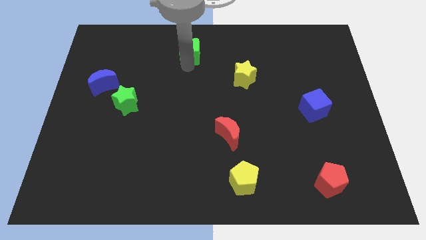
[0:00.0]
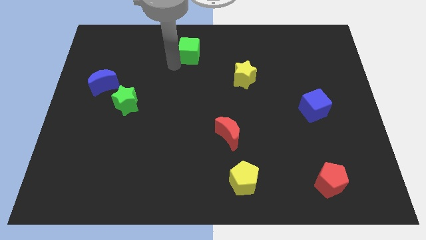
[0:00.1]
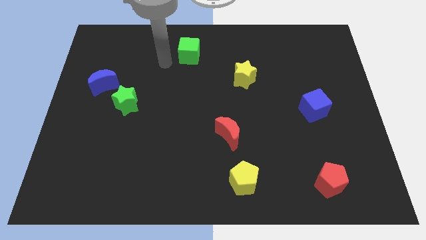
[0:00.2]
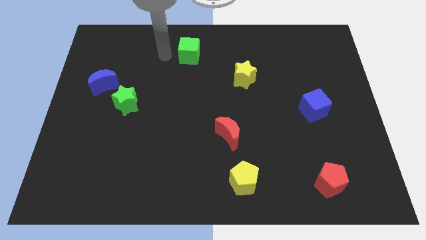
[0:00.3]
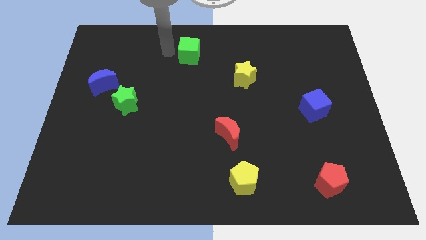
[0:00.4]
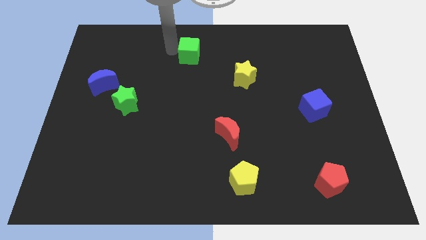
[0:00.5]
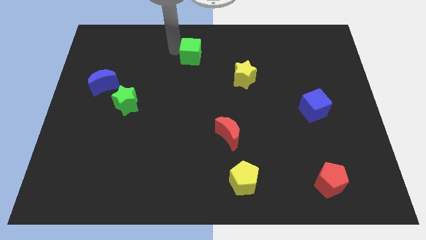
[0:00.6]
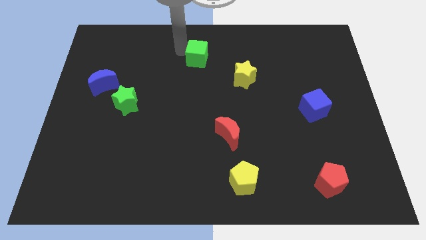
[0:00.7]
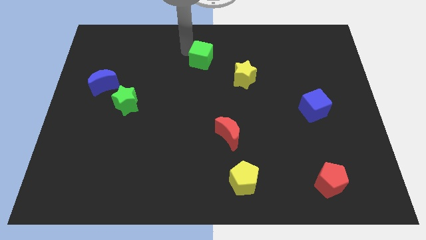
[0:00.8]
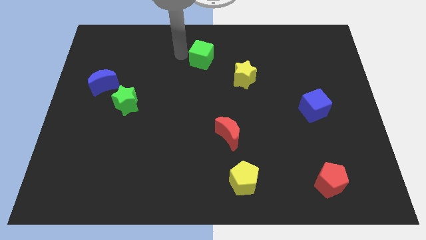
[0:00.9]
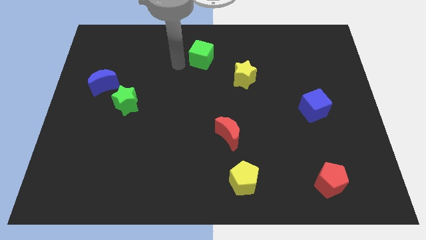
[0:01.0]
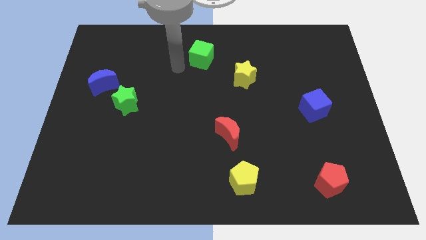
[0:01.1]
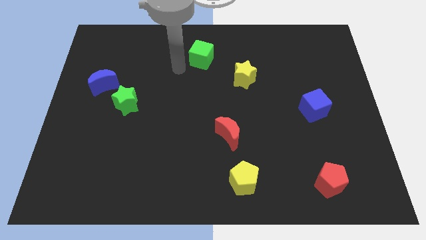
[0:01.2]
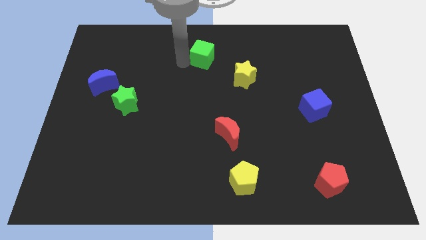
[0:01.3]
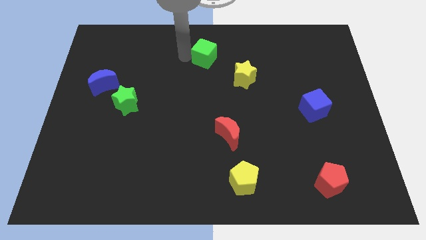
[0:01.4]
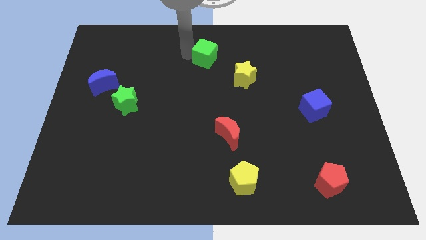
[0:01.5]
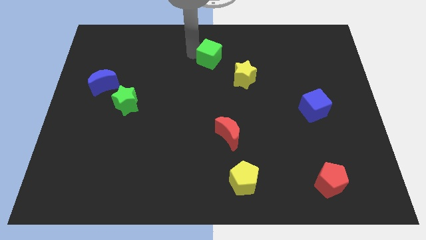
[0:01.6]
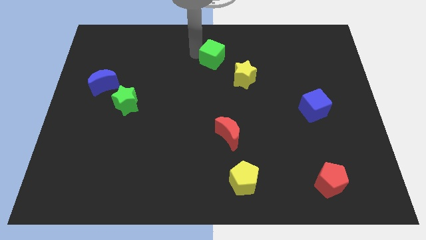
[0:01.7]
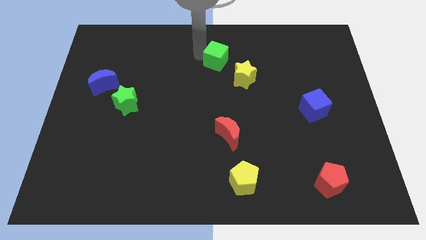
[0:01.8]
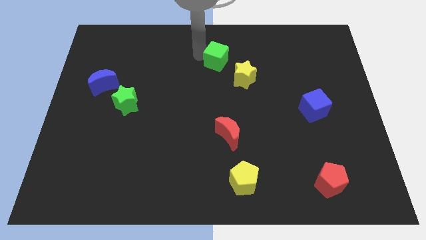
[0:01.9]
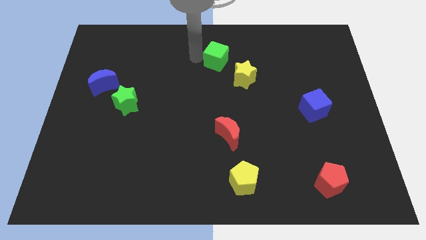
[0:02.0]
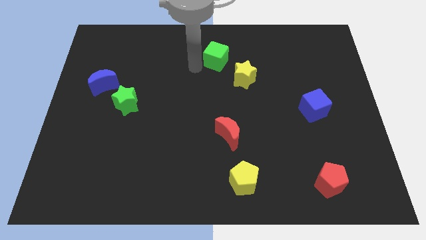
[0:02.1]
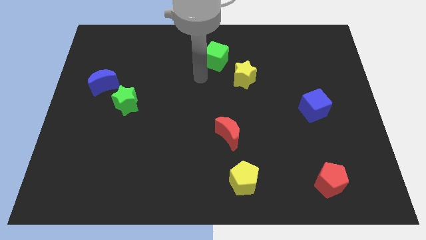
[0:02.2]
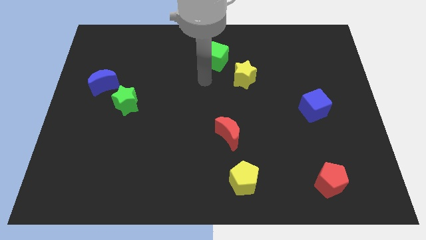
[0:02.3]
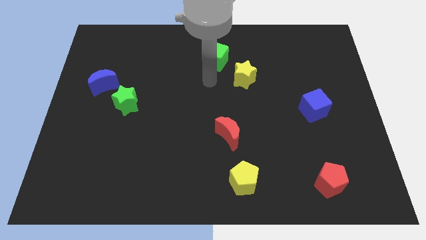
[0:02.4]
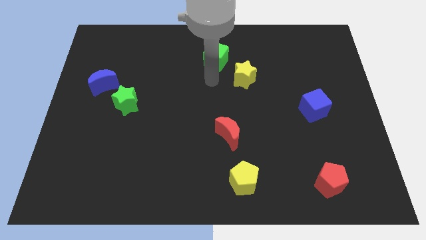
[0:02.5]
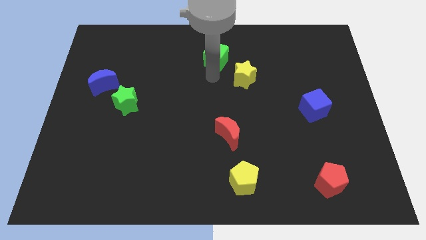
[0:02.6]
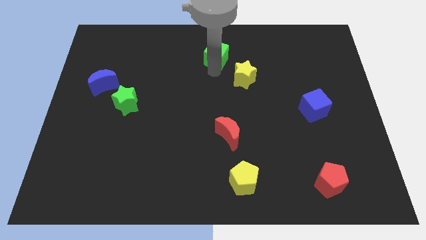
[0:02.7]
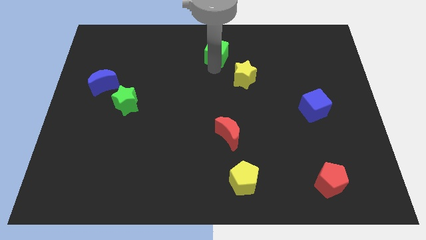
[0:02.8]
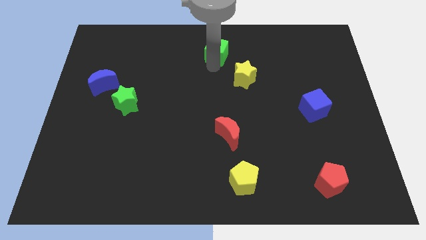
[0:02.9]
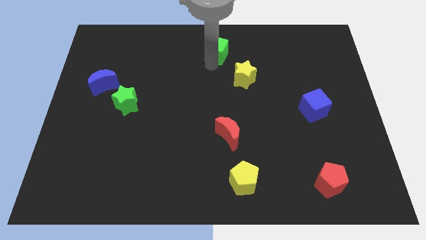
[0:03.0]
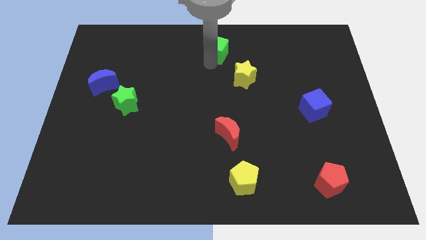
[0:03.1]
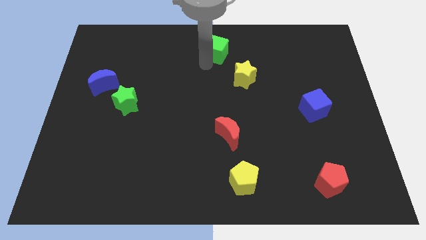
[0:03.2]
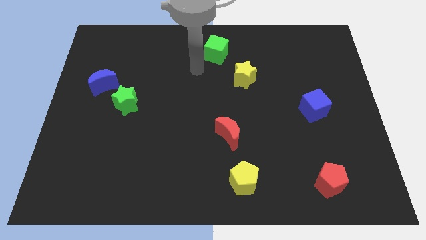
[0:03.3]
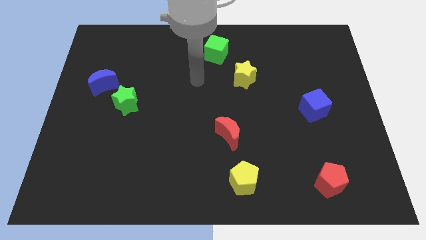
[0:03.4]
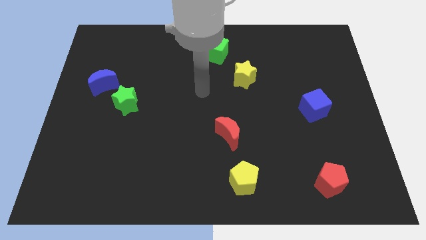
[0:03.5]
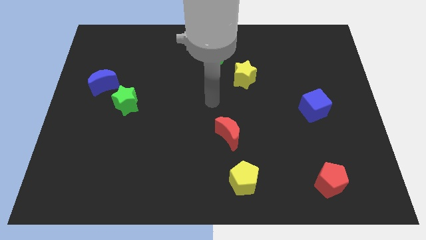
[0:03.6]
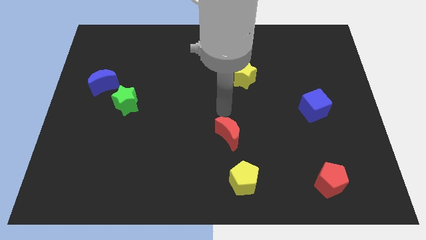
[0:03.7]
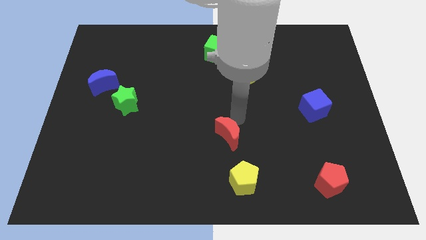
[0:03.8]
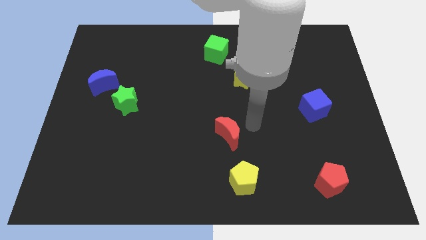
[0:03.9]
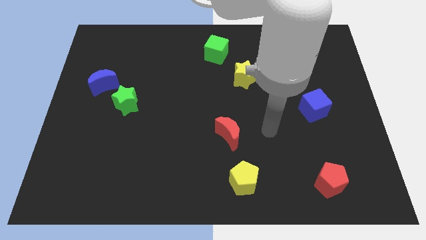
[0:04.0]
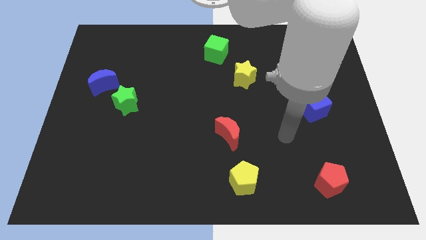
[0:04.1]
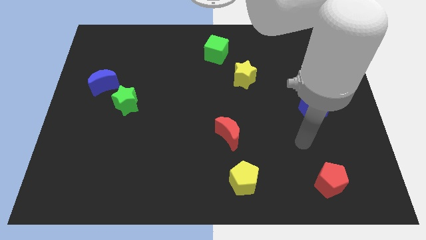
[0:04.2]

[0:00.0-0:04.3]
place the green cube to the left top of the yellow star

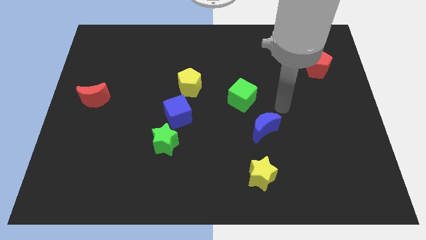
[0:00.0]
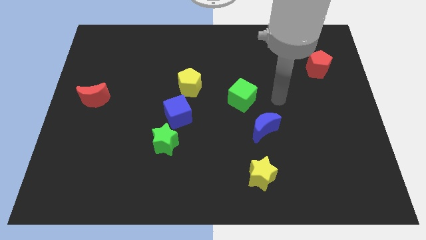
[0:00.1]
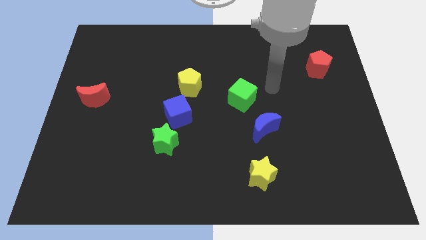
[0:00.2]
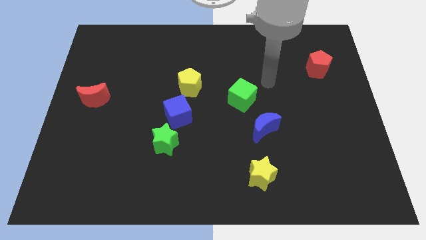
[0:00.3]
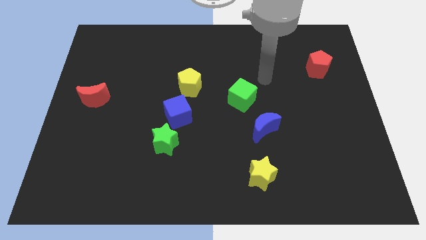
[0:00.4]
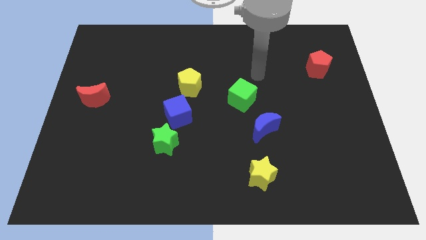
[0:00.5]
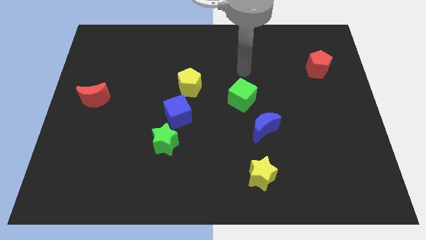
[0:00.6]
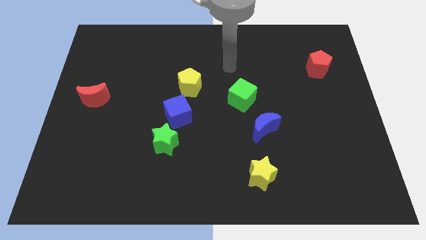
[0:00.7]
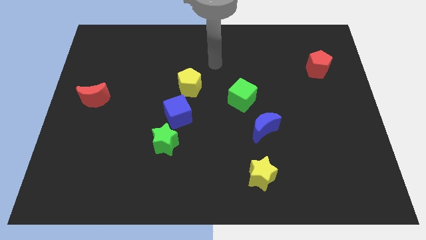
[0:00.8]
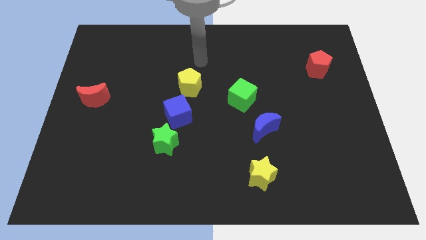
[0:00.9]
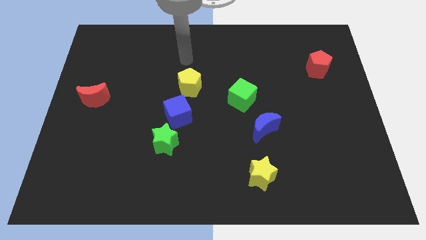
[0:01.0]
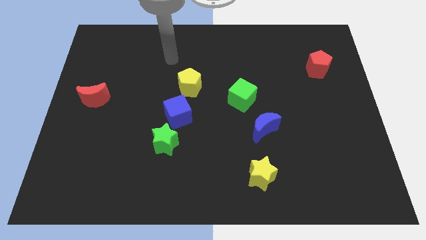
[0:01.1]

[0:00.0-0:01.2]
place the arm at the top of the yellow pentagon

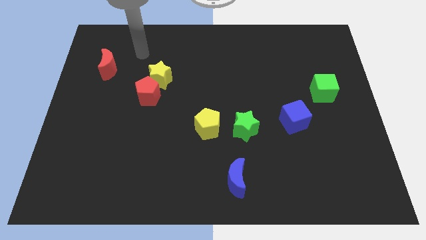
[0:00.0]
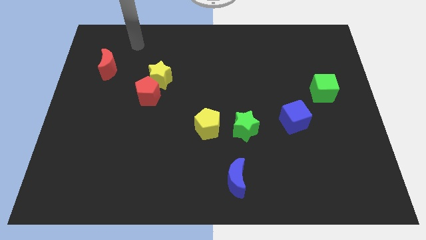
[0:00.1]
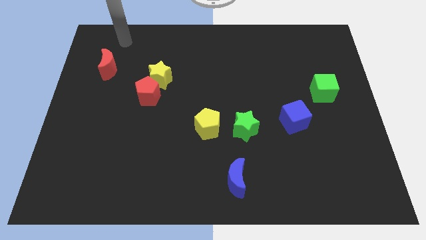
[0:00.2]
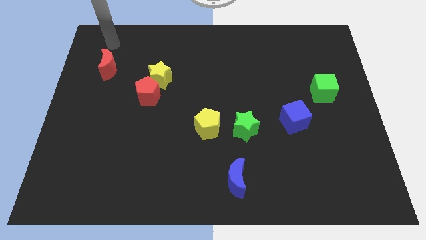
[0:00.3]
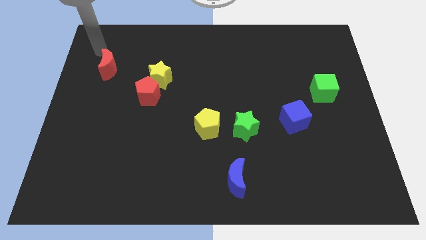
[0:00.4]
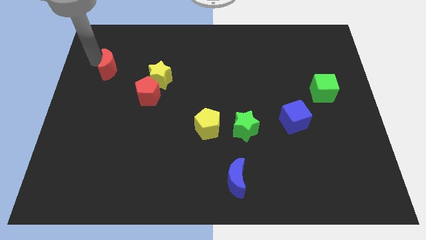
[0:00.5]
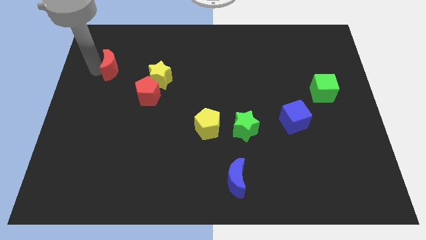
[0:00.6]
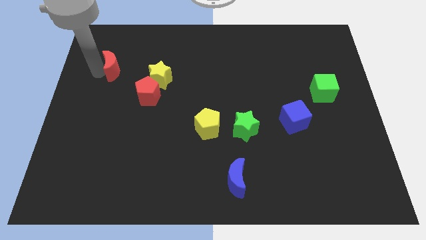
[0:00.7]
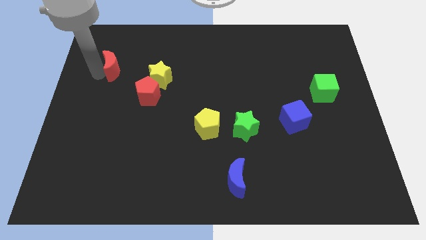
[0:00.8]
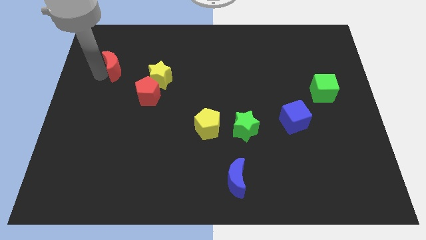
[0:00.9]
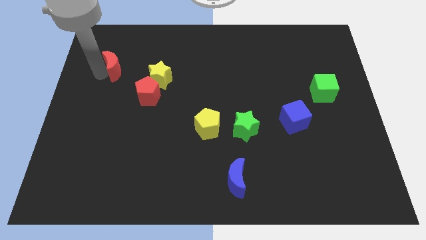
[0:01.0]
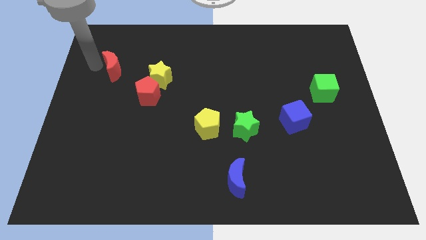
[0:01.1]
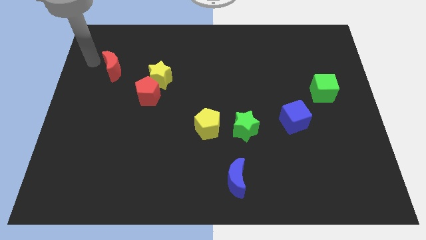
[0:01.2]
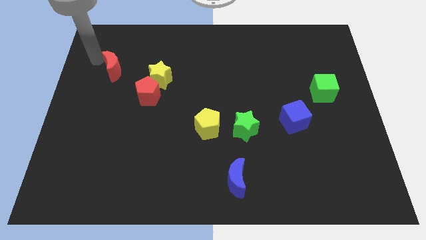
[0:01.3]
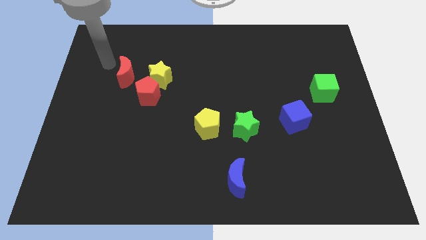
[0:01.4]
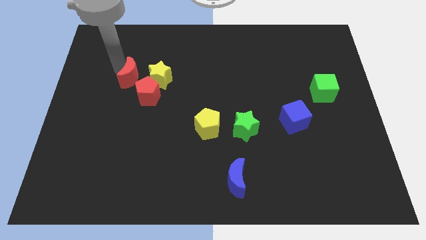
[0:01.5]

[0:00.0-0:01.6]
push the red crescent slightly to the right

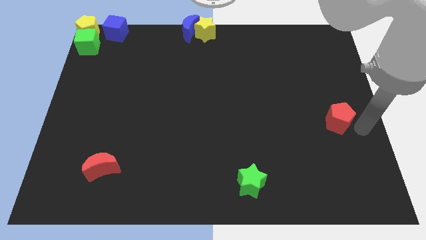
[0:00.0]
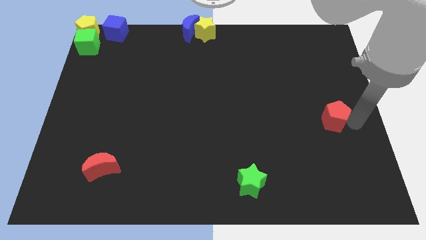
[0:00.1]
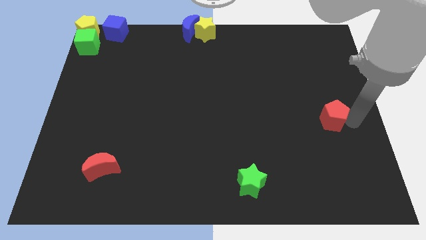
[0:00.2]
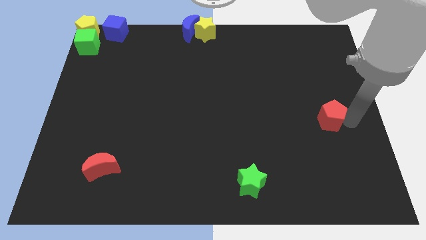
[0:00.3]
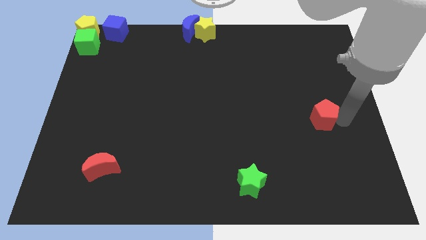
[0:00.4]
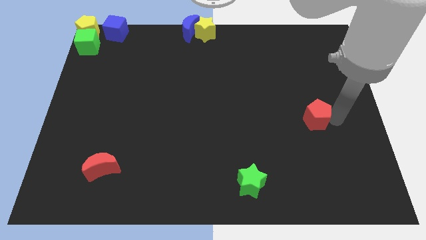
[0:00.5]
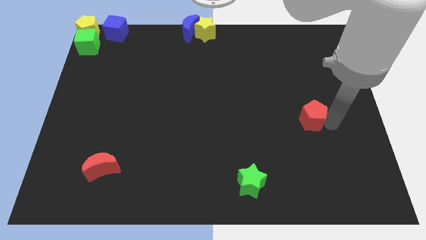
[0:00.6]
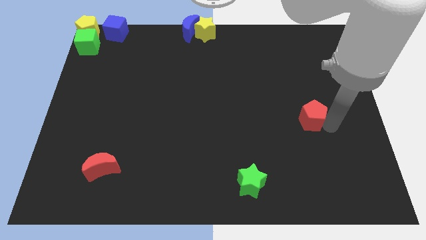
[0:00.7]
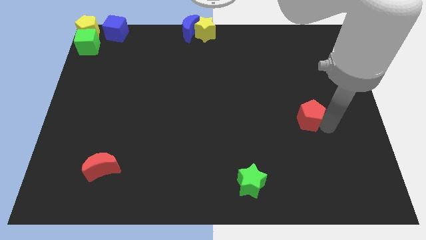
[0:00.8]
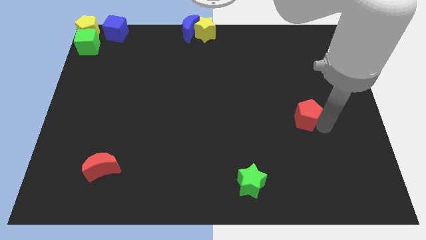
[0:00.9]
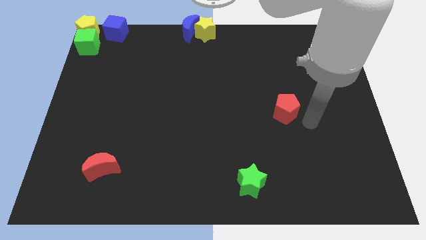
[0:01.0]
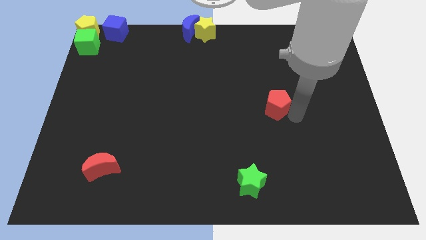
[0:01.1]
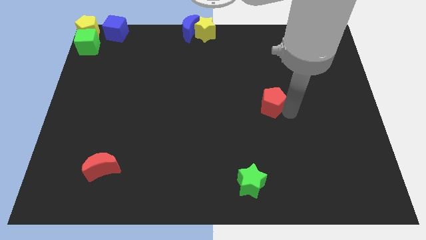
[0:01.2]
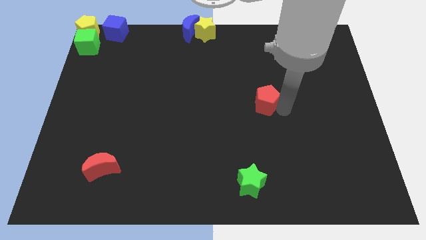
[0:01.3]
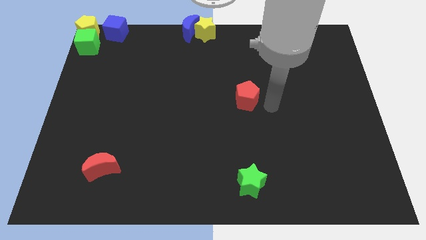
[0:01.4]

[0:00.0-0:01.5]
place the red pentagon vertically above the green star

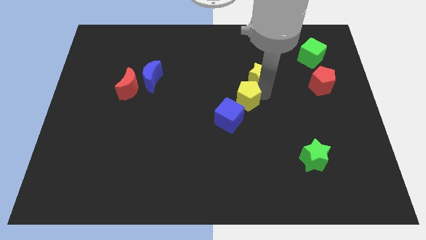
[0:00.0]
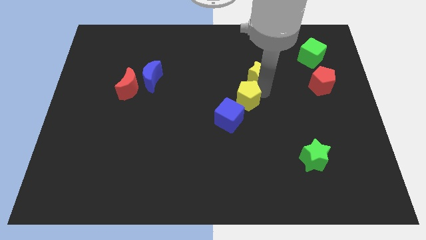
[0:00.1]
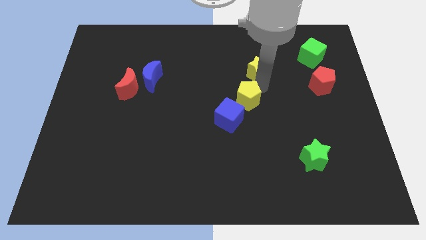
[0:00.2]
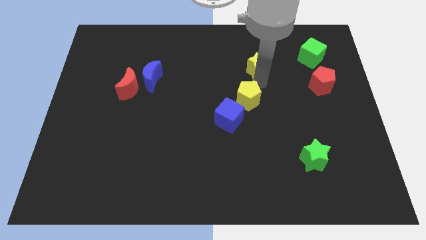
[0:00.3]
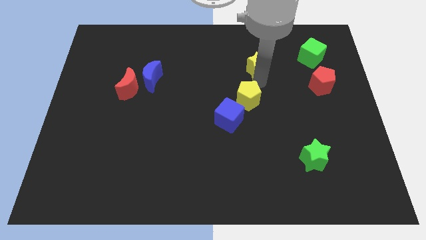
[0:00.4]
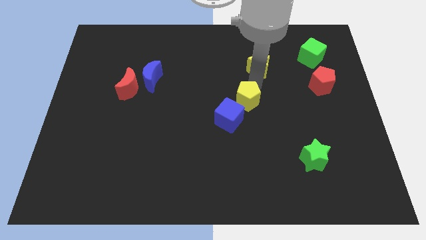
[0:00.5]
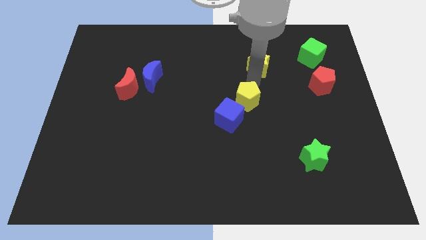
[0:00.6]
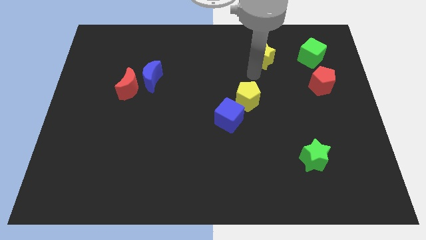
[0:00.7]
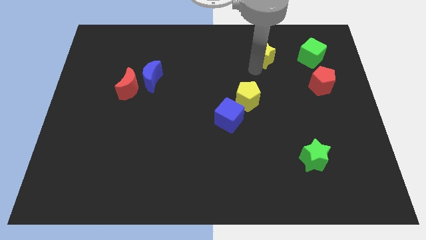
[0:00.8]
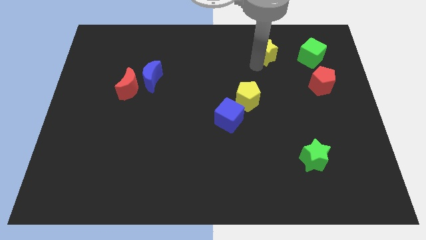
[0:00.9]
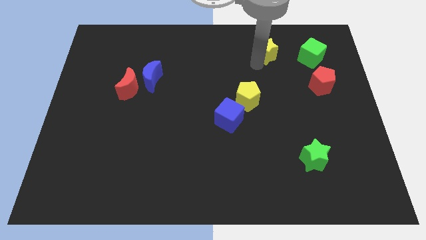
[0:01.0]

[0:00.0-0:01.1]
push the yellow star to the left of the green cube
